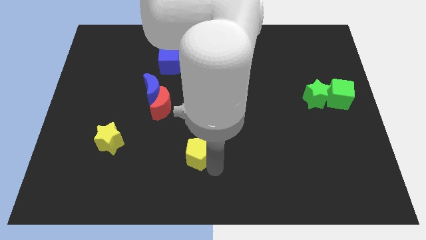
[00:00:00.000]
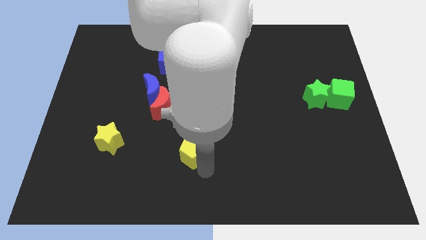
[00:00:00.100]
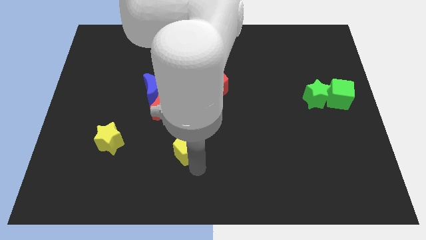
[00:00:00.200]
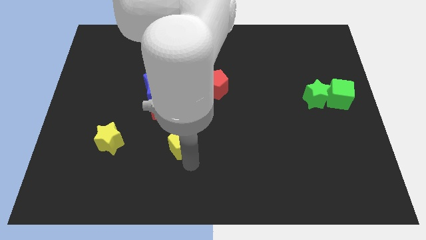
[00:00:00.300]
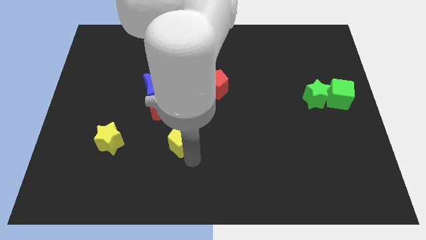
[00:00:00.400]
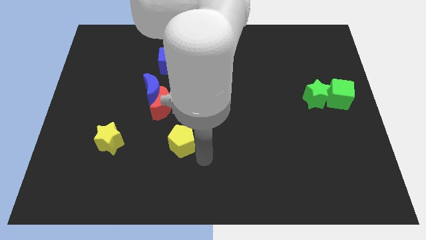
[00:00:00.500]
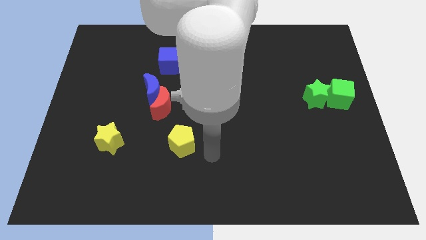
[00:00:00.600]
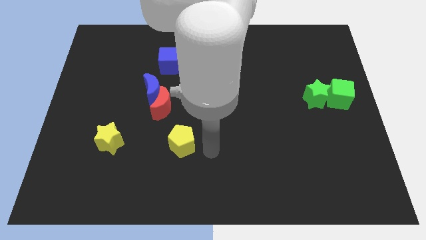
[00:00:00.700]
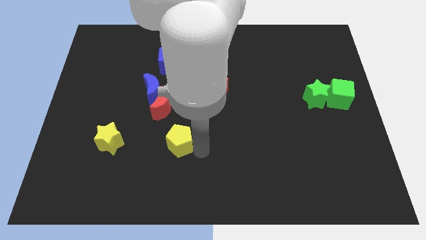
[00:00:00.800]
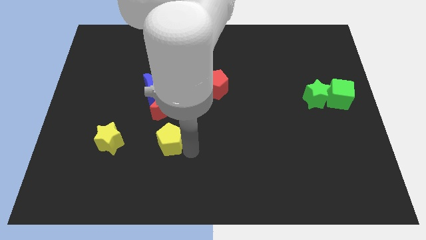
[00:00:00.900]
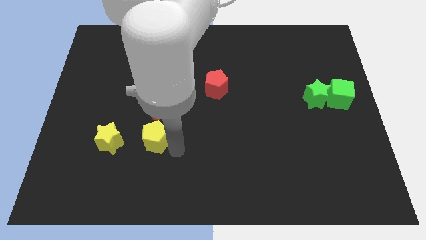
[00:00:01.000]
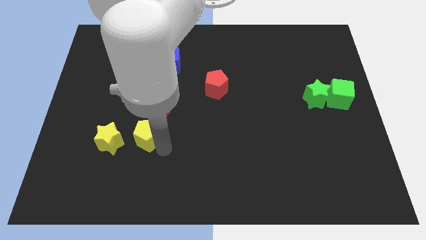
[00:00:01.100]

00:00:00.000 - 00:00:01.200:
place the yellow pentagon below the red crescent

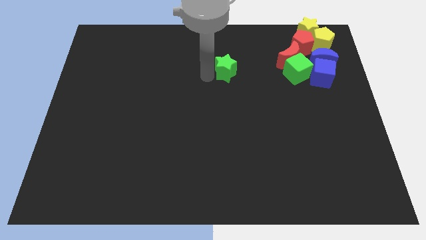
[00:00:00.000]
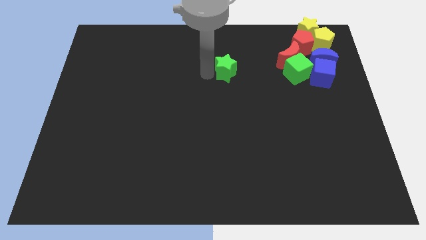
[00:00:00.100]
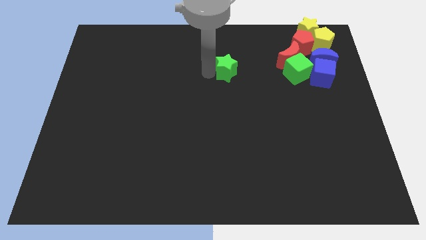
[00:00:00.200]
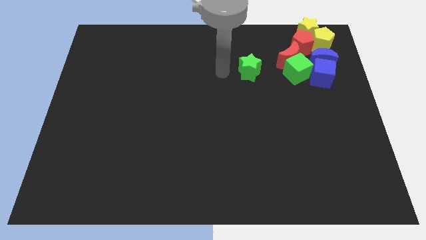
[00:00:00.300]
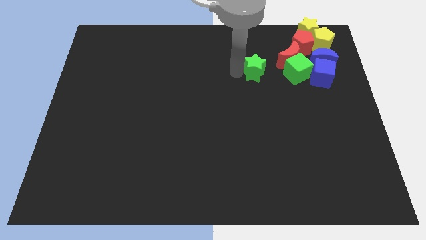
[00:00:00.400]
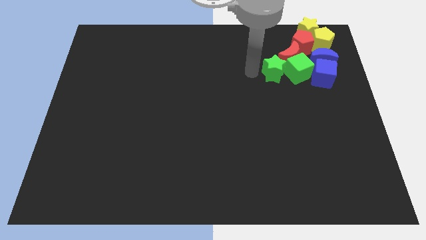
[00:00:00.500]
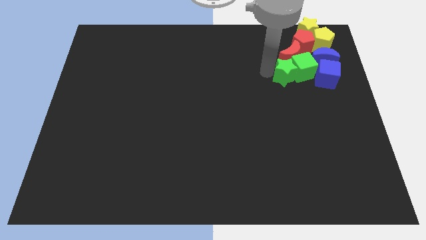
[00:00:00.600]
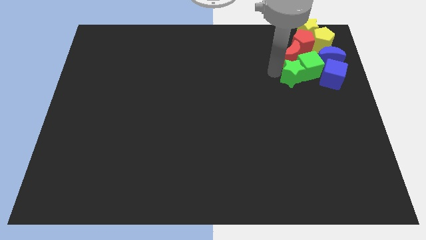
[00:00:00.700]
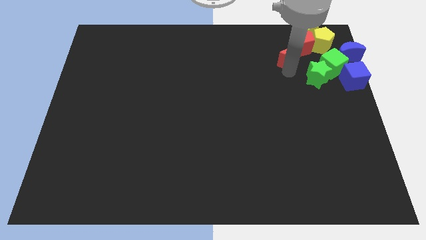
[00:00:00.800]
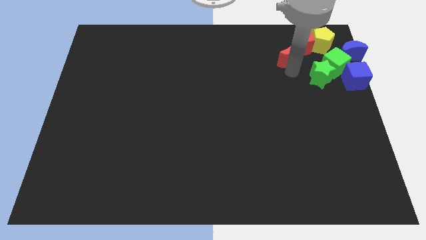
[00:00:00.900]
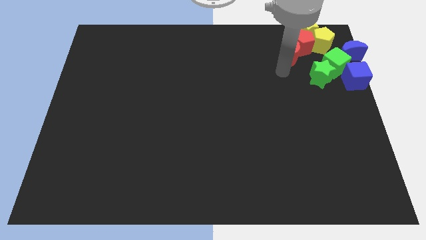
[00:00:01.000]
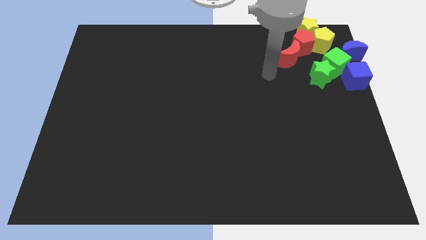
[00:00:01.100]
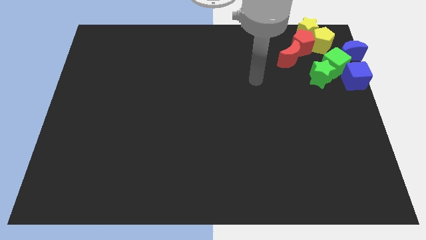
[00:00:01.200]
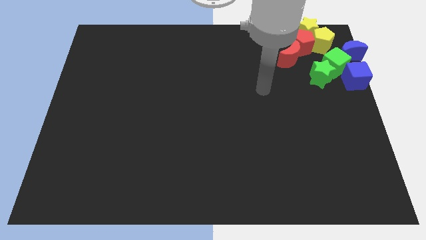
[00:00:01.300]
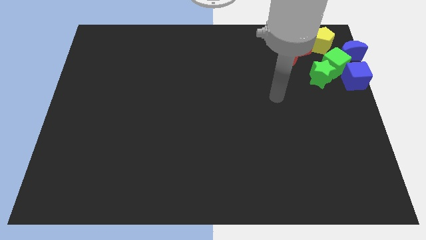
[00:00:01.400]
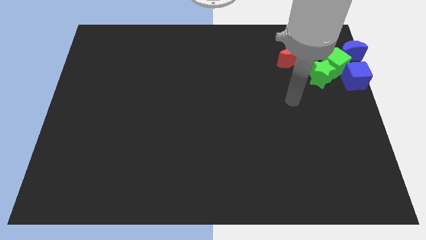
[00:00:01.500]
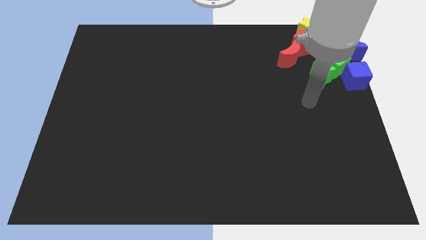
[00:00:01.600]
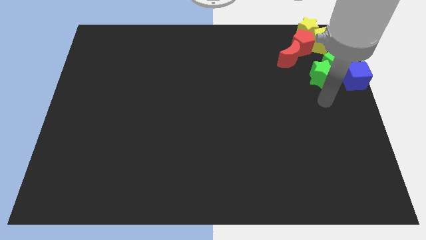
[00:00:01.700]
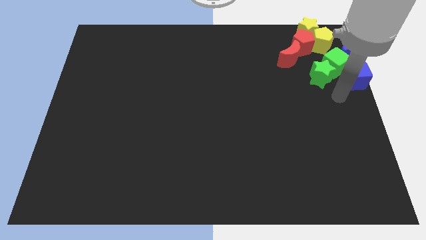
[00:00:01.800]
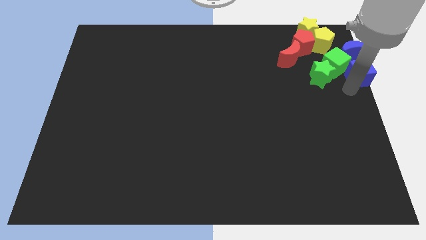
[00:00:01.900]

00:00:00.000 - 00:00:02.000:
move the green star towards the group of blocks at the top right corner of the board

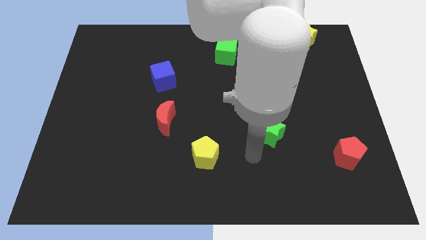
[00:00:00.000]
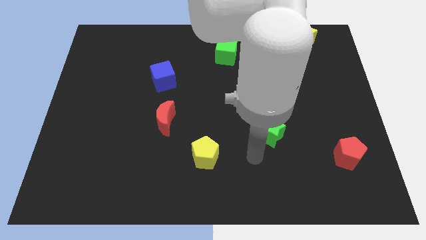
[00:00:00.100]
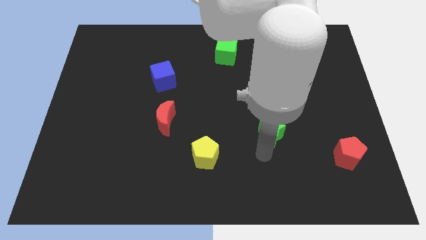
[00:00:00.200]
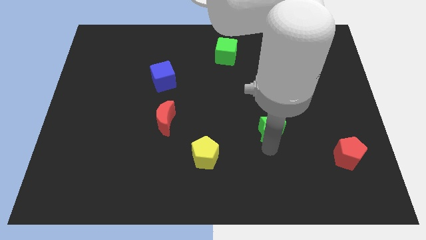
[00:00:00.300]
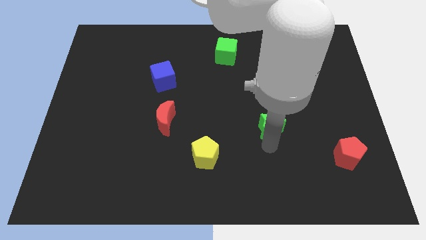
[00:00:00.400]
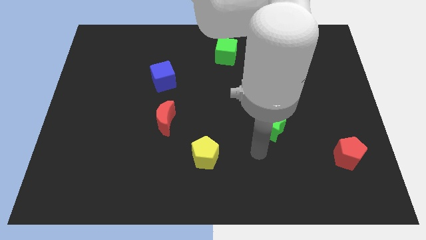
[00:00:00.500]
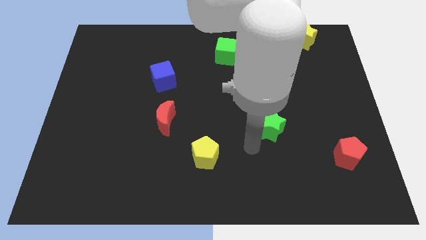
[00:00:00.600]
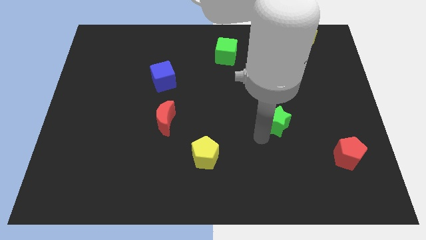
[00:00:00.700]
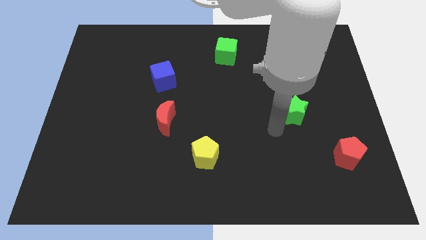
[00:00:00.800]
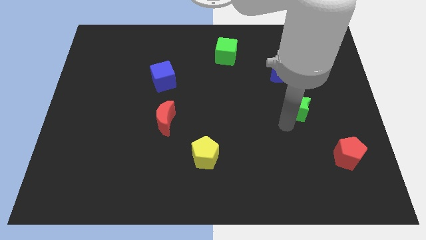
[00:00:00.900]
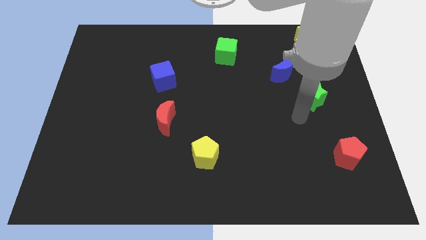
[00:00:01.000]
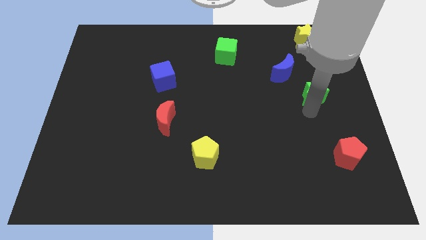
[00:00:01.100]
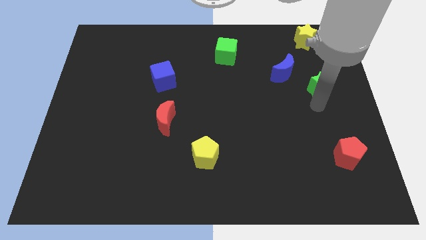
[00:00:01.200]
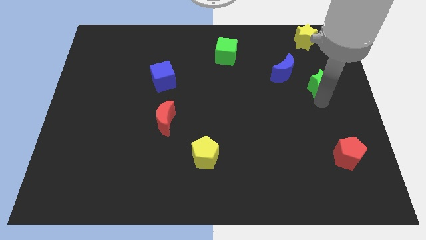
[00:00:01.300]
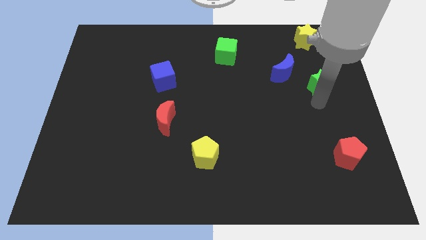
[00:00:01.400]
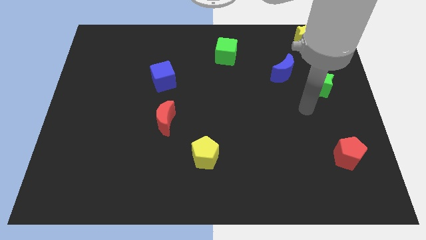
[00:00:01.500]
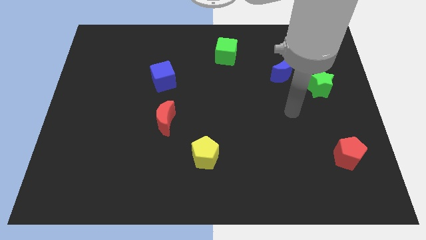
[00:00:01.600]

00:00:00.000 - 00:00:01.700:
push the green star diagonal to the blue crescent

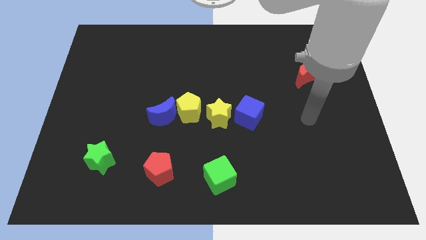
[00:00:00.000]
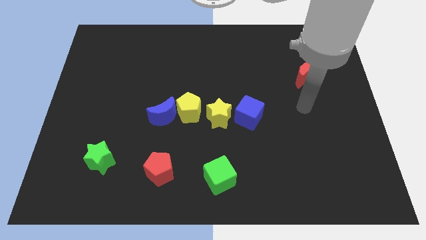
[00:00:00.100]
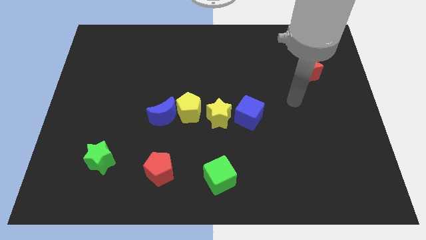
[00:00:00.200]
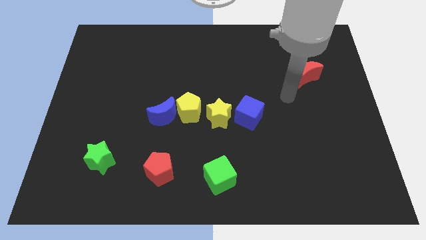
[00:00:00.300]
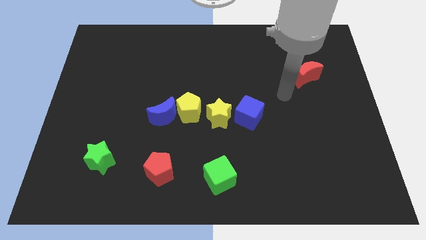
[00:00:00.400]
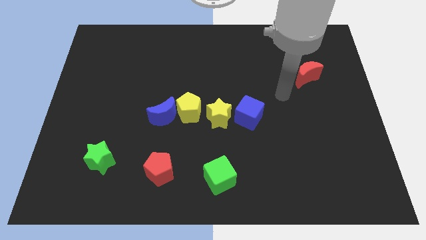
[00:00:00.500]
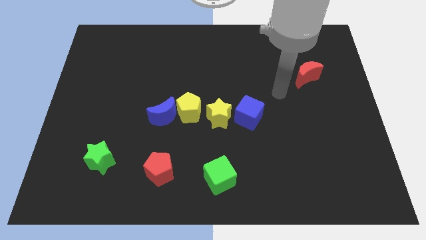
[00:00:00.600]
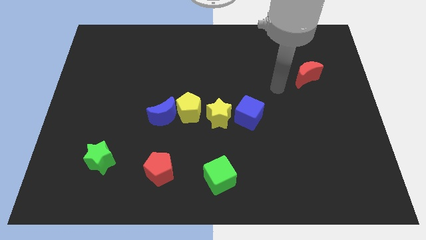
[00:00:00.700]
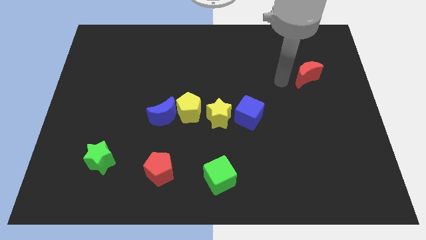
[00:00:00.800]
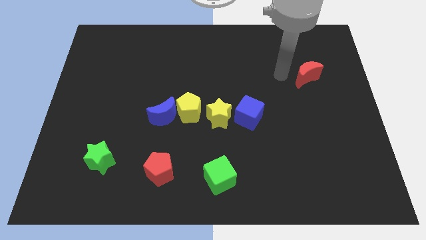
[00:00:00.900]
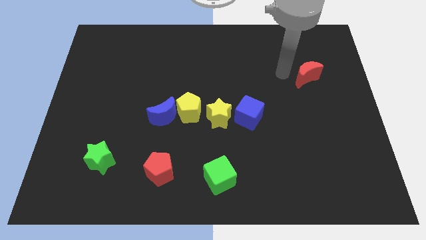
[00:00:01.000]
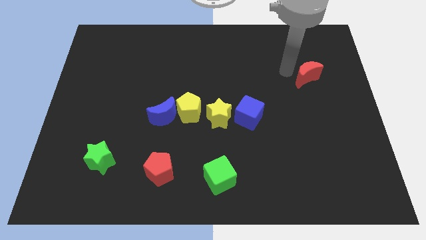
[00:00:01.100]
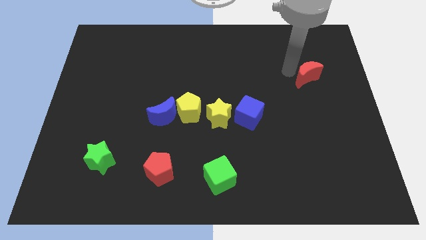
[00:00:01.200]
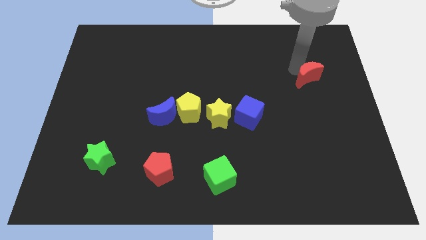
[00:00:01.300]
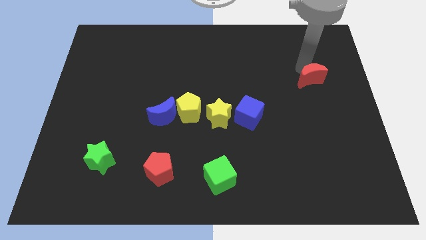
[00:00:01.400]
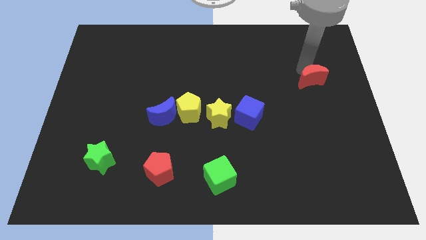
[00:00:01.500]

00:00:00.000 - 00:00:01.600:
slightly move the red crescent to the bottom of the board

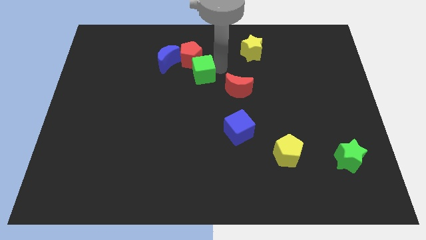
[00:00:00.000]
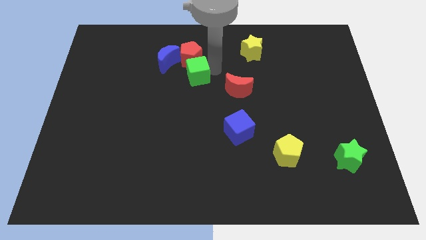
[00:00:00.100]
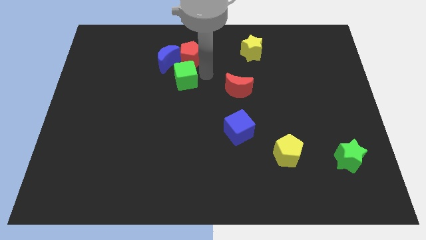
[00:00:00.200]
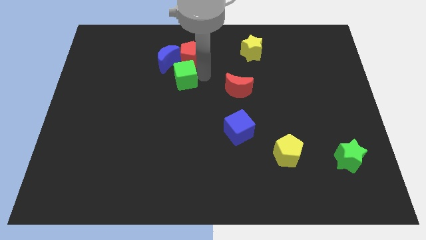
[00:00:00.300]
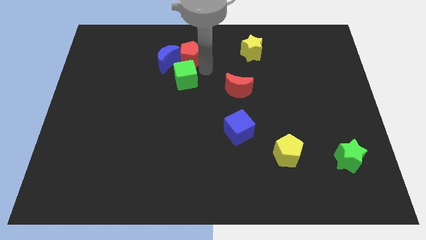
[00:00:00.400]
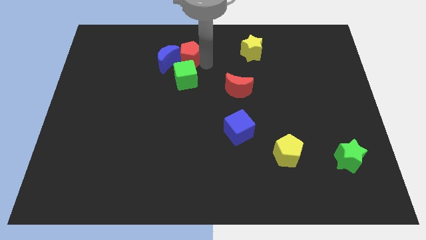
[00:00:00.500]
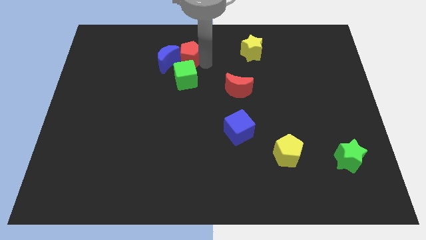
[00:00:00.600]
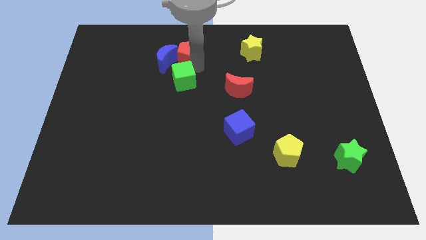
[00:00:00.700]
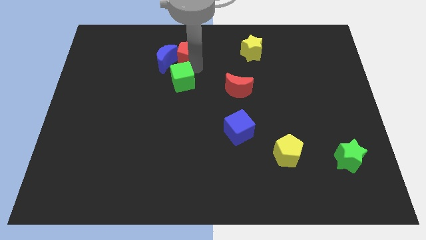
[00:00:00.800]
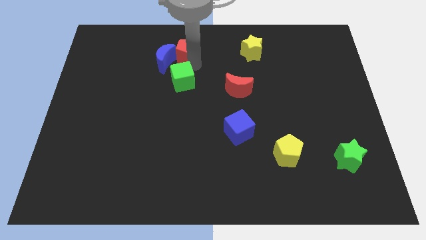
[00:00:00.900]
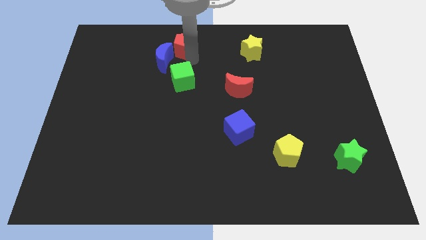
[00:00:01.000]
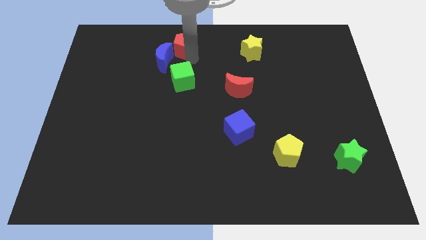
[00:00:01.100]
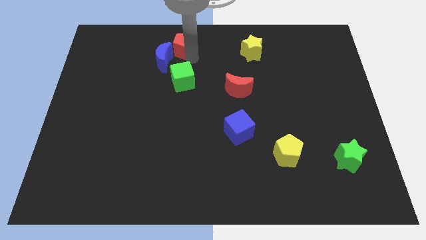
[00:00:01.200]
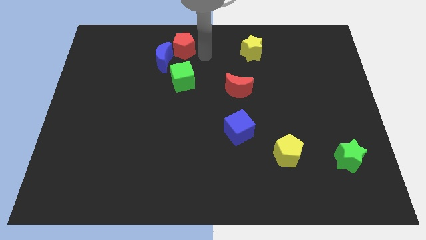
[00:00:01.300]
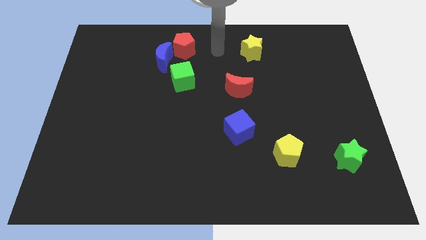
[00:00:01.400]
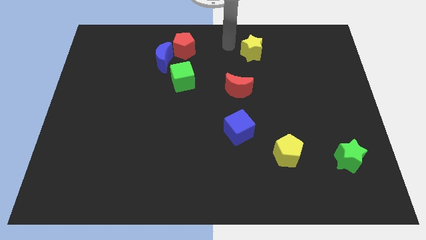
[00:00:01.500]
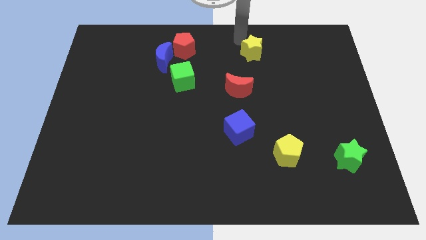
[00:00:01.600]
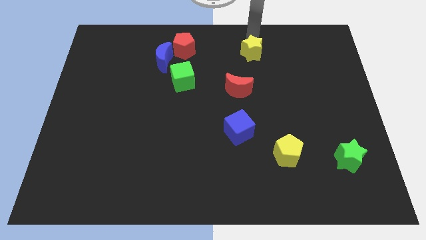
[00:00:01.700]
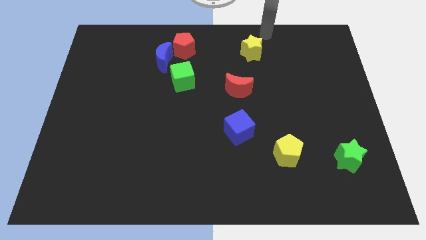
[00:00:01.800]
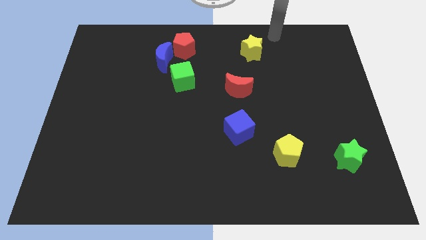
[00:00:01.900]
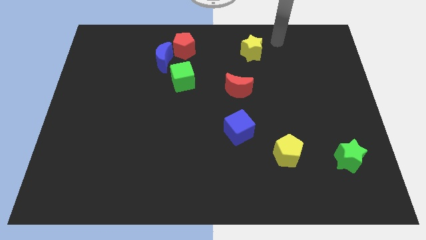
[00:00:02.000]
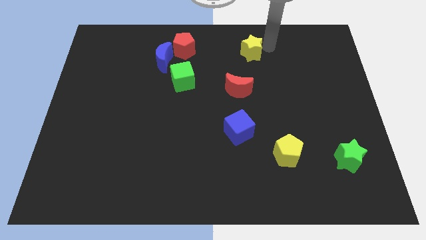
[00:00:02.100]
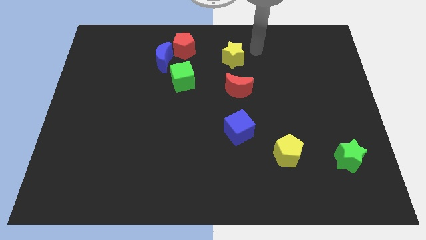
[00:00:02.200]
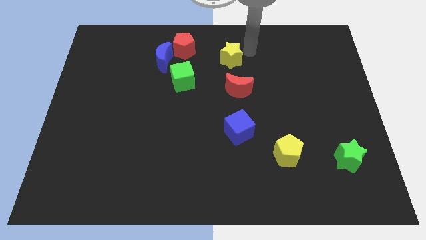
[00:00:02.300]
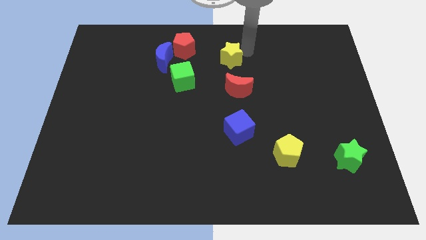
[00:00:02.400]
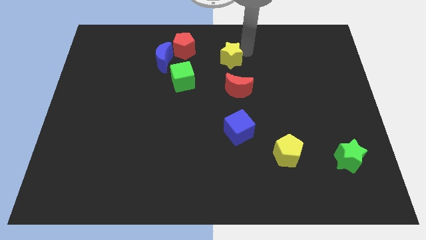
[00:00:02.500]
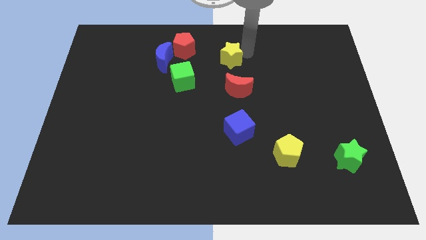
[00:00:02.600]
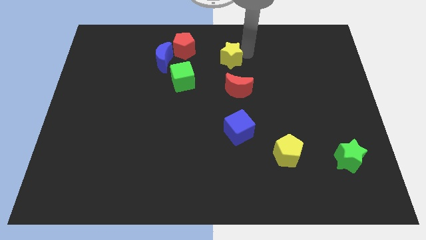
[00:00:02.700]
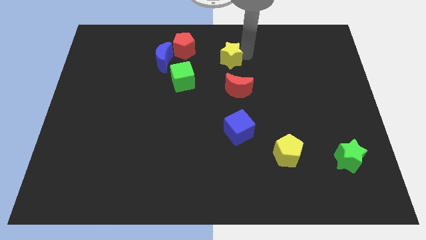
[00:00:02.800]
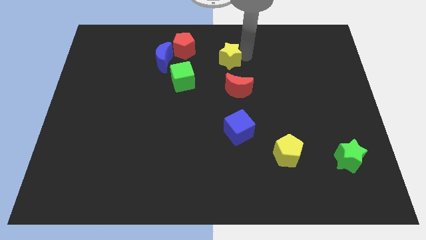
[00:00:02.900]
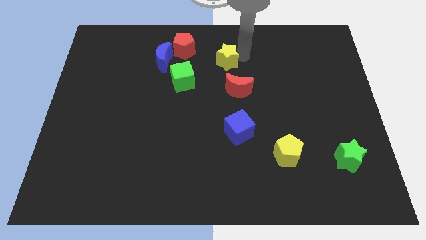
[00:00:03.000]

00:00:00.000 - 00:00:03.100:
move the yellow star parallel top of the red crescent
